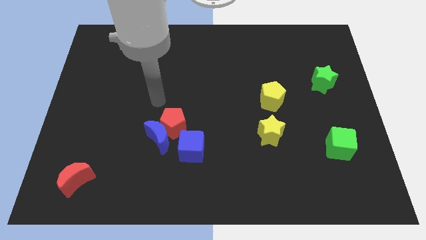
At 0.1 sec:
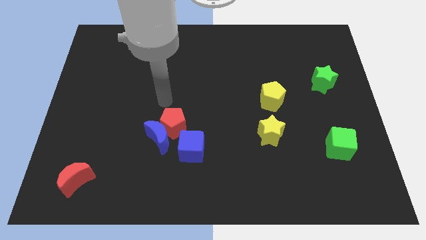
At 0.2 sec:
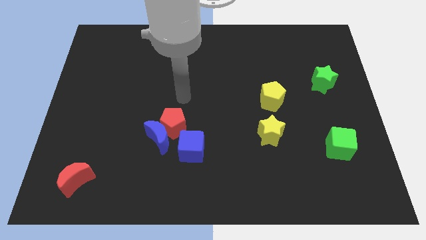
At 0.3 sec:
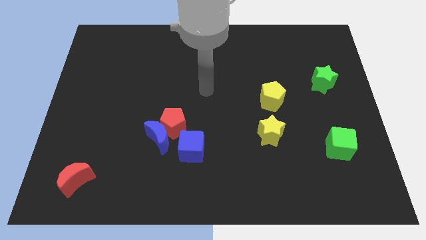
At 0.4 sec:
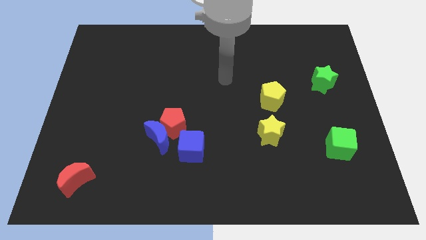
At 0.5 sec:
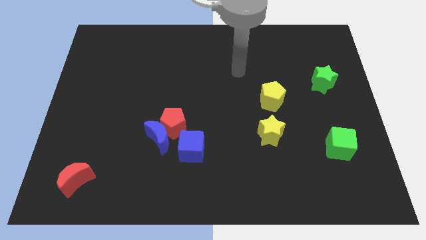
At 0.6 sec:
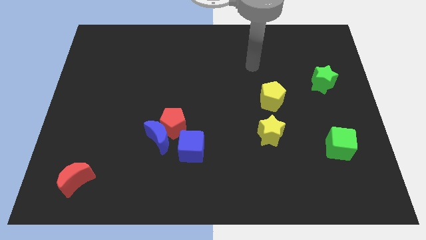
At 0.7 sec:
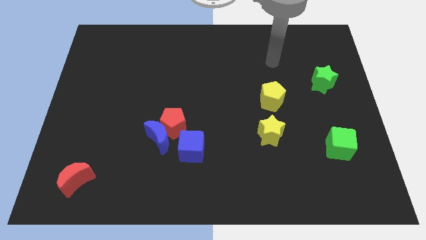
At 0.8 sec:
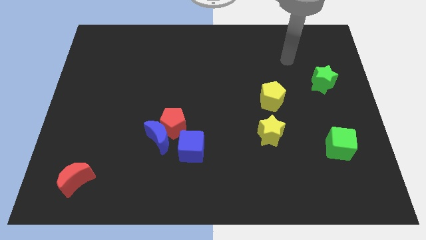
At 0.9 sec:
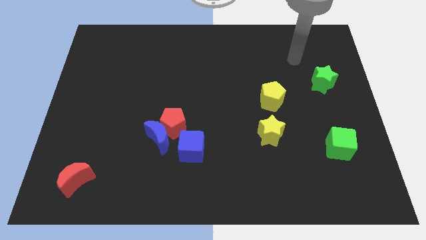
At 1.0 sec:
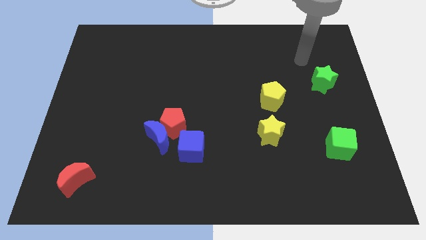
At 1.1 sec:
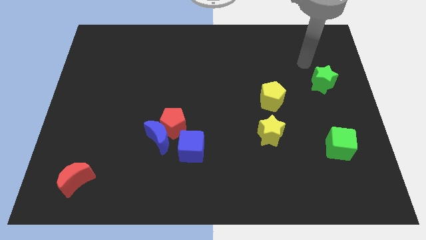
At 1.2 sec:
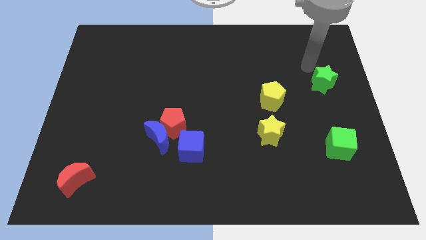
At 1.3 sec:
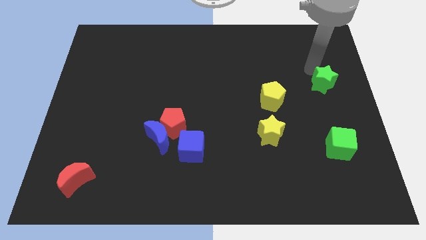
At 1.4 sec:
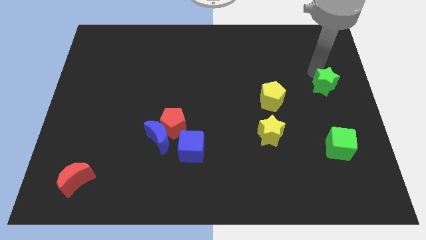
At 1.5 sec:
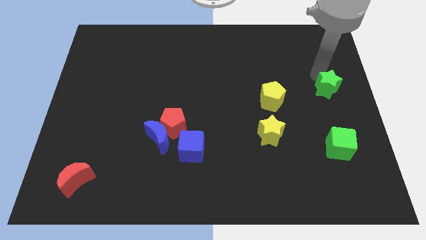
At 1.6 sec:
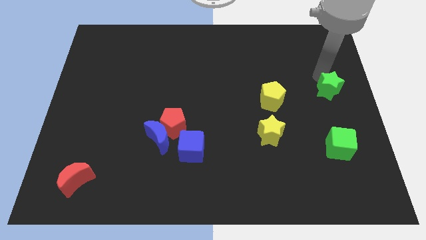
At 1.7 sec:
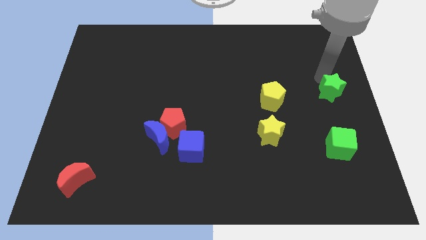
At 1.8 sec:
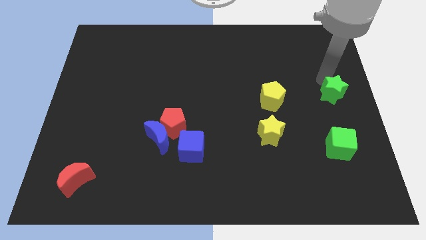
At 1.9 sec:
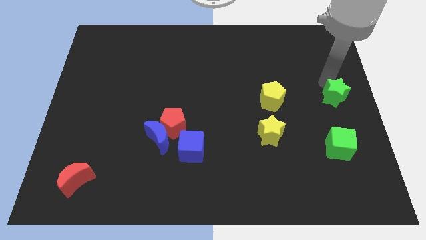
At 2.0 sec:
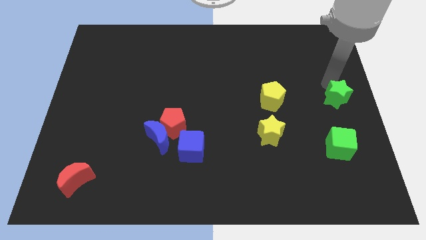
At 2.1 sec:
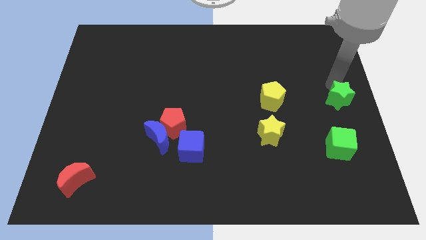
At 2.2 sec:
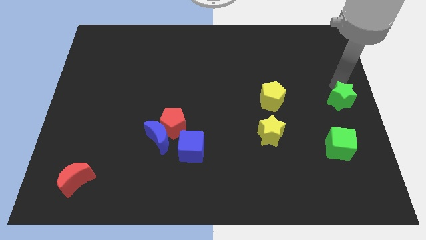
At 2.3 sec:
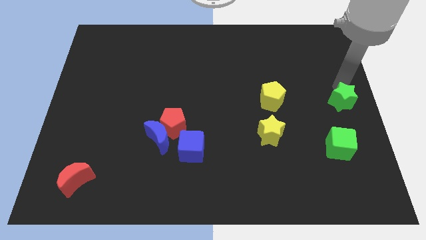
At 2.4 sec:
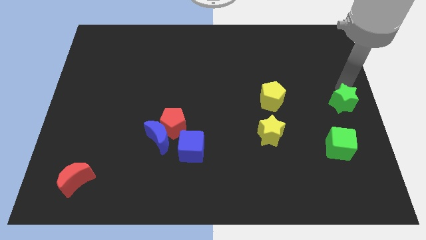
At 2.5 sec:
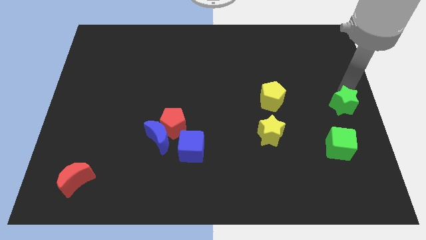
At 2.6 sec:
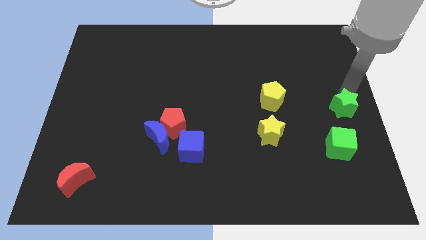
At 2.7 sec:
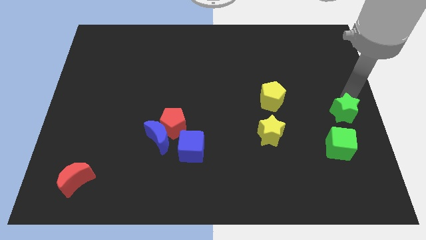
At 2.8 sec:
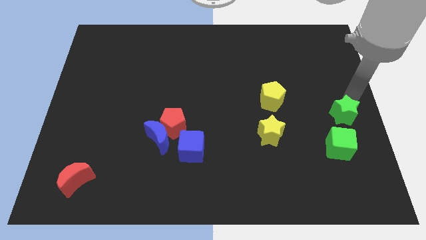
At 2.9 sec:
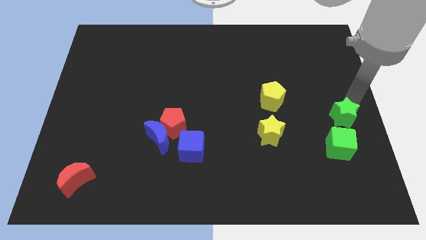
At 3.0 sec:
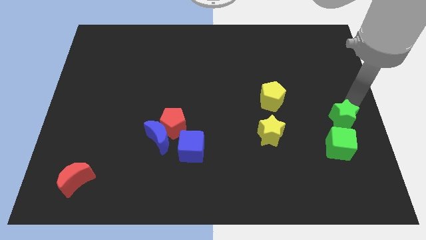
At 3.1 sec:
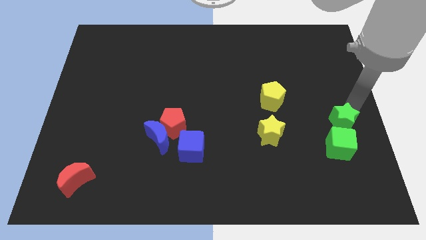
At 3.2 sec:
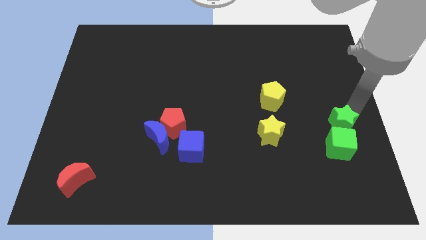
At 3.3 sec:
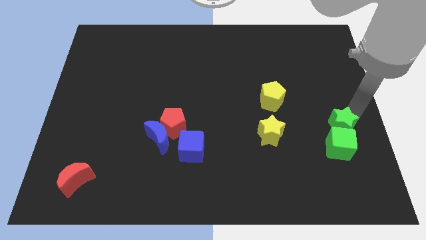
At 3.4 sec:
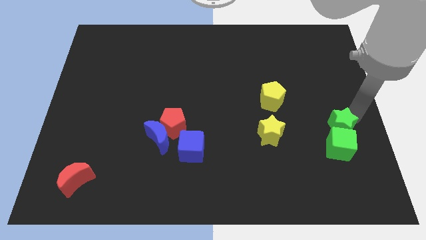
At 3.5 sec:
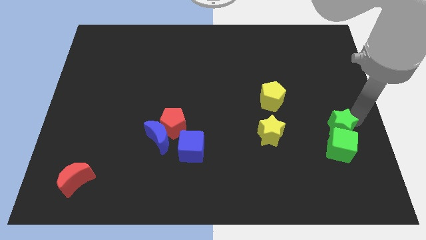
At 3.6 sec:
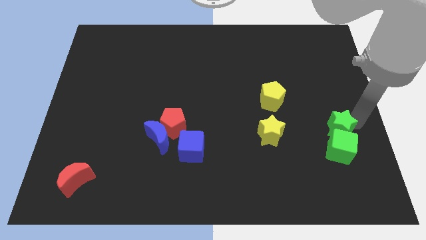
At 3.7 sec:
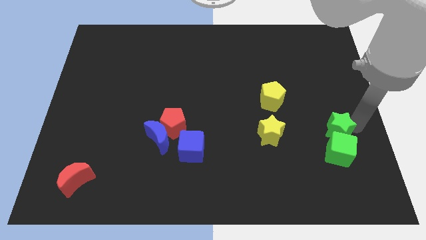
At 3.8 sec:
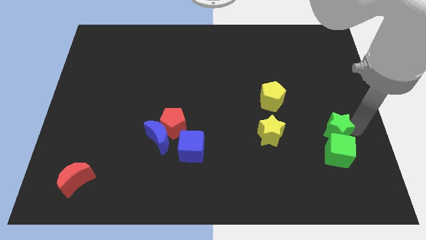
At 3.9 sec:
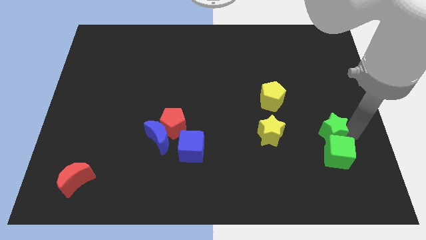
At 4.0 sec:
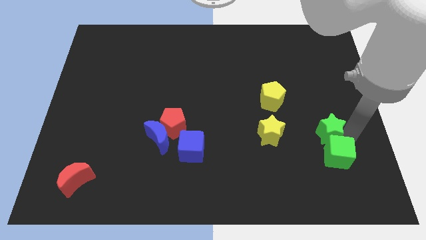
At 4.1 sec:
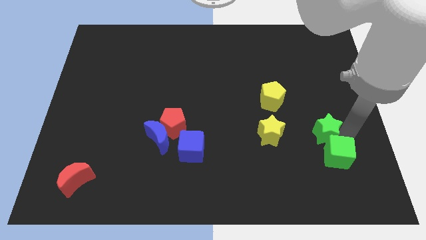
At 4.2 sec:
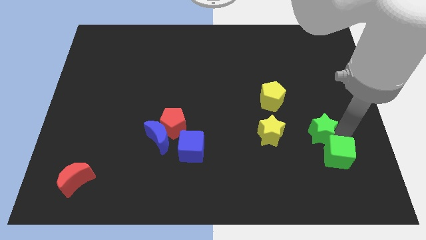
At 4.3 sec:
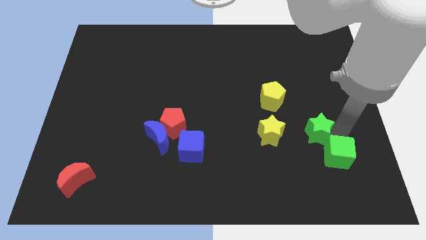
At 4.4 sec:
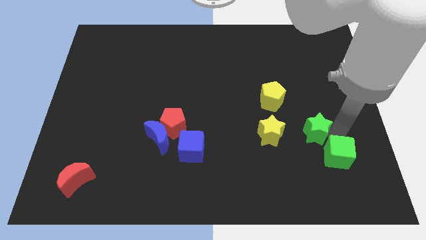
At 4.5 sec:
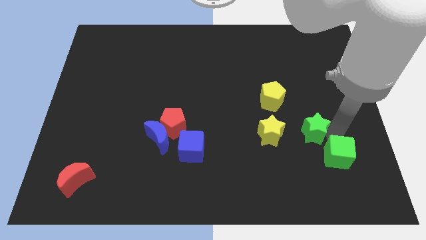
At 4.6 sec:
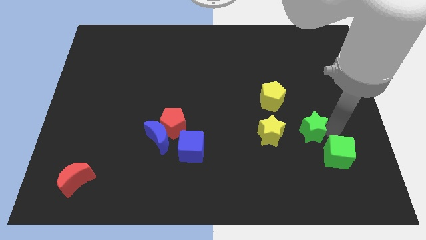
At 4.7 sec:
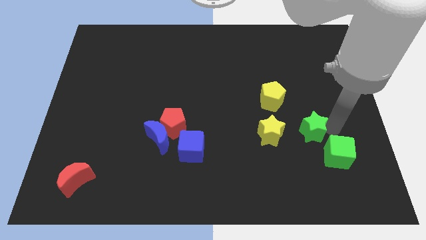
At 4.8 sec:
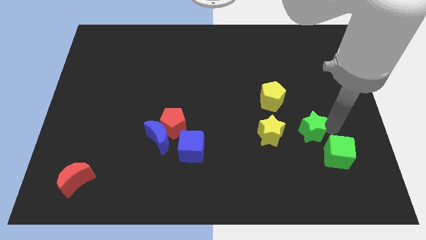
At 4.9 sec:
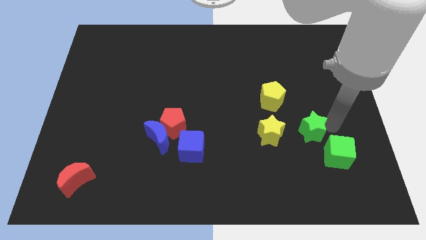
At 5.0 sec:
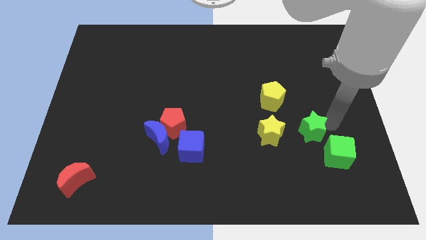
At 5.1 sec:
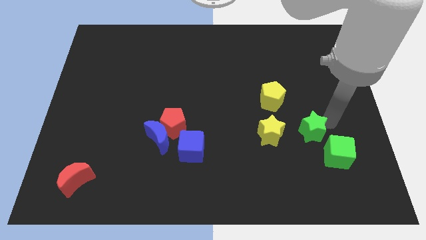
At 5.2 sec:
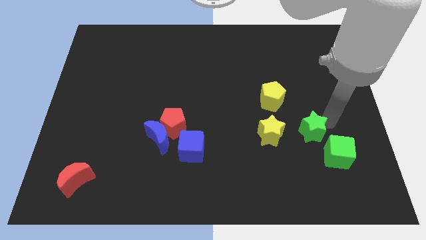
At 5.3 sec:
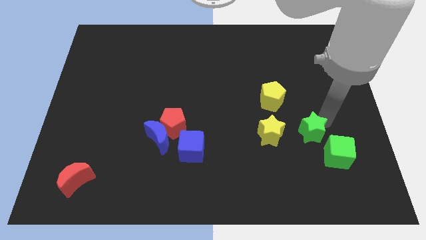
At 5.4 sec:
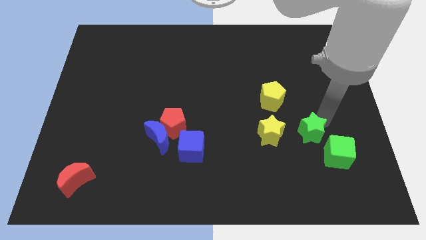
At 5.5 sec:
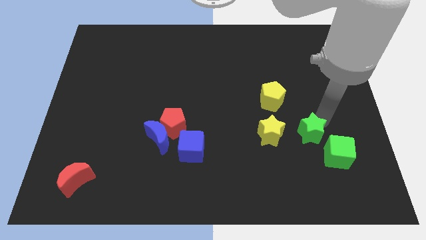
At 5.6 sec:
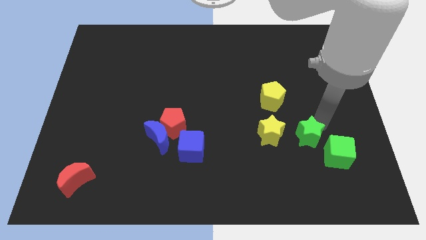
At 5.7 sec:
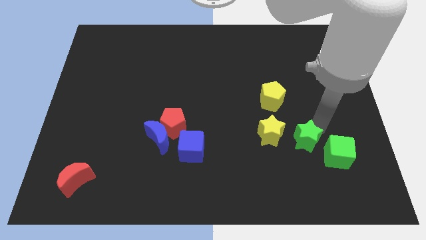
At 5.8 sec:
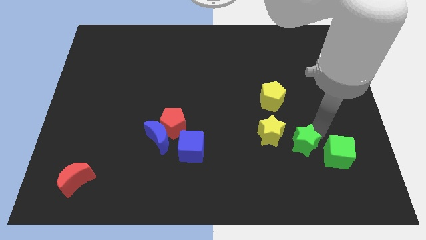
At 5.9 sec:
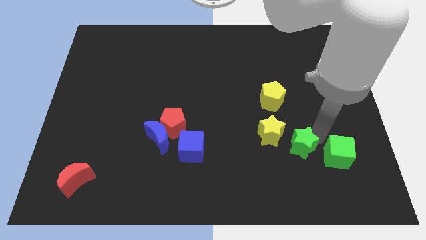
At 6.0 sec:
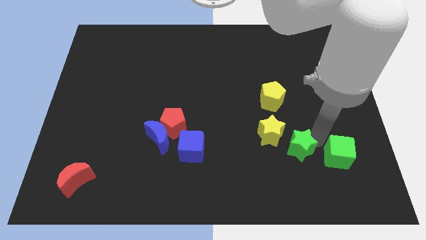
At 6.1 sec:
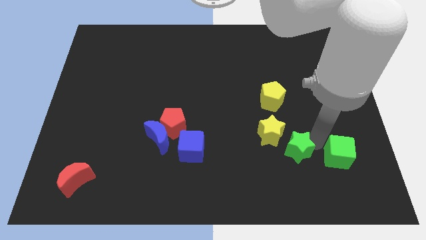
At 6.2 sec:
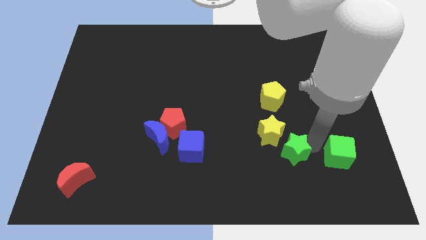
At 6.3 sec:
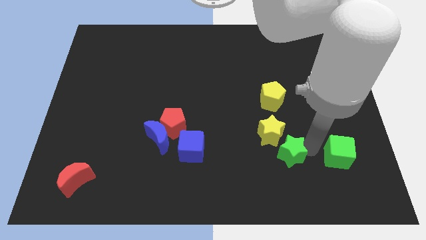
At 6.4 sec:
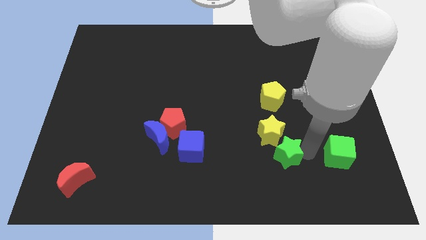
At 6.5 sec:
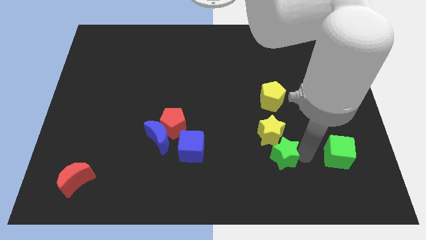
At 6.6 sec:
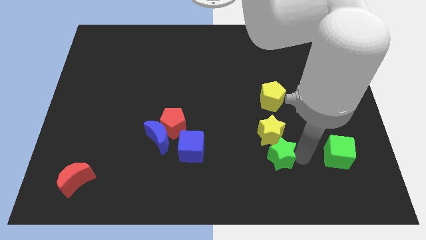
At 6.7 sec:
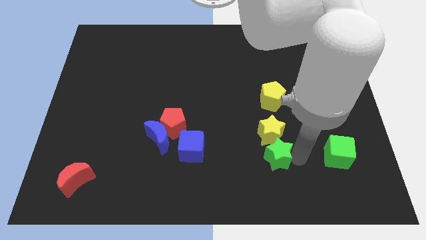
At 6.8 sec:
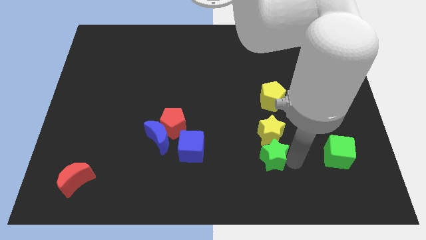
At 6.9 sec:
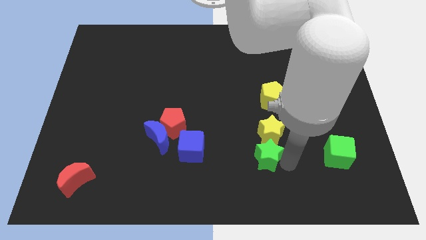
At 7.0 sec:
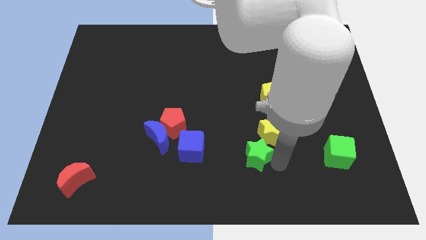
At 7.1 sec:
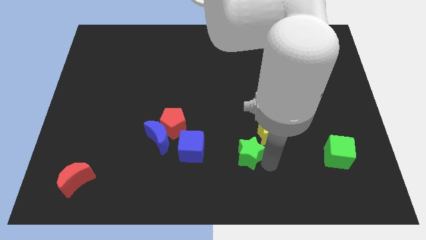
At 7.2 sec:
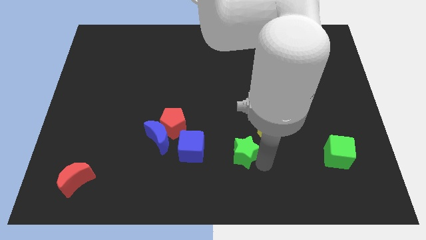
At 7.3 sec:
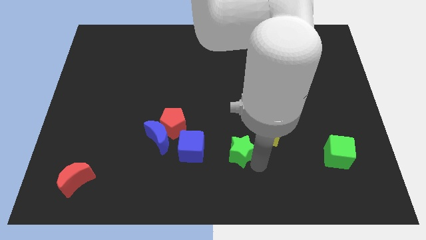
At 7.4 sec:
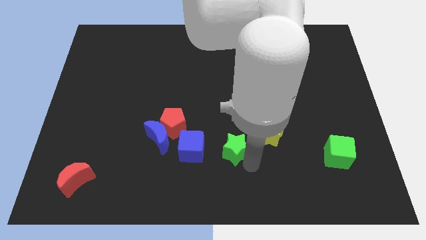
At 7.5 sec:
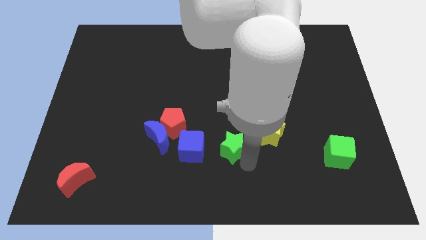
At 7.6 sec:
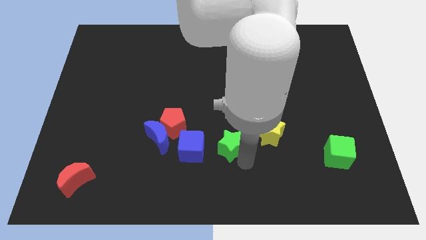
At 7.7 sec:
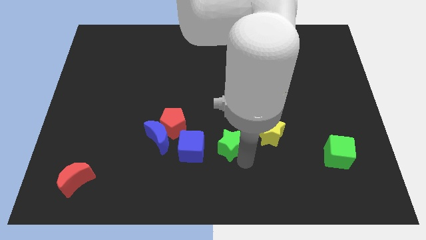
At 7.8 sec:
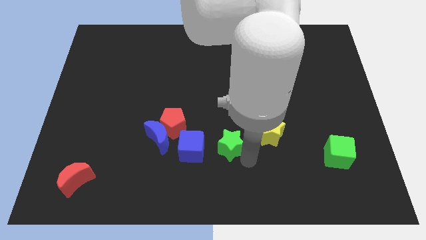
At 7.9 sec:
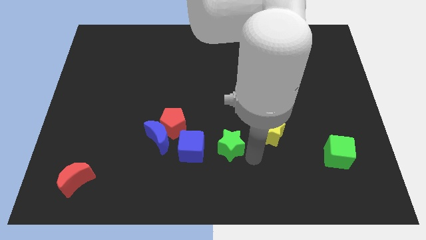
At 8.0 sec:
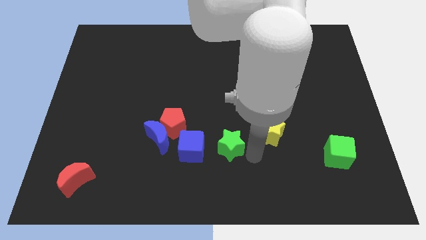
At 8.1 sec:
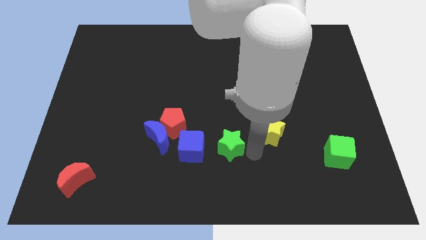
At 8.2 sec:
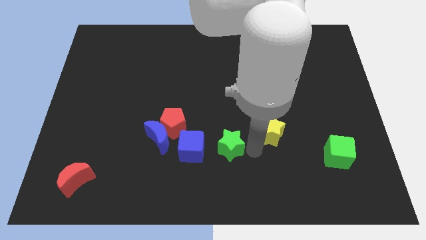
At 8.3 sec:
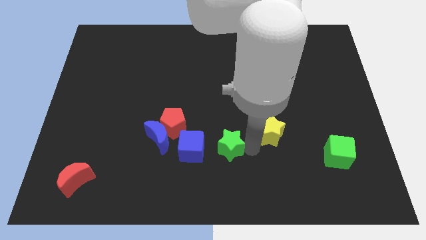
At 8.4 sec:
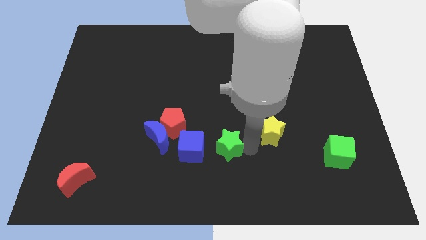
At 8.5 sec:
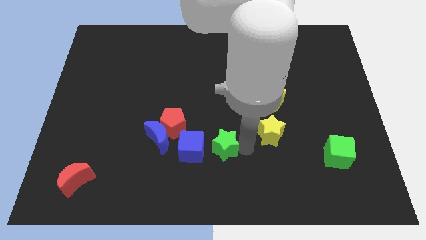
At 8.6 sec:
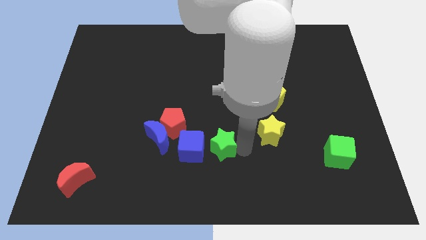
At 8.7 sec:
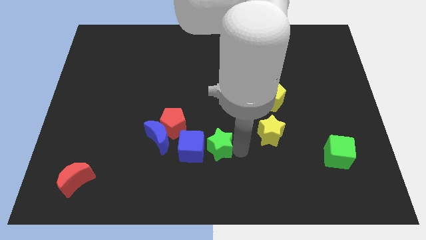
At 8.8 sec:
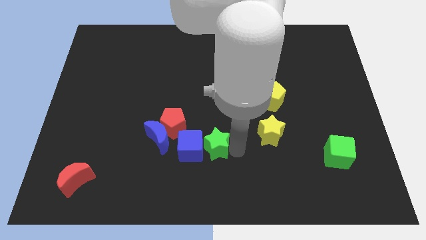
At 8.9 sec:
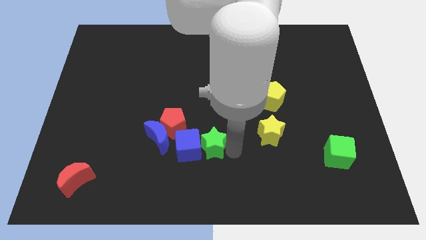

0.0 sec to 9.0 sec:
push the green star close to the blue cube
